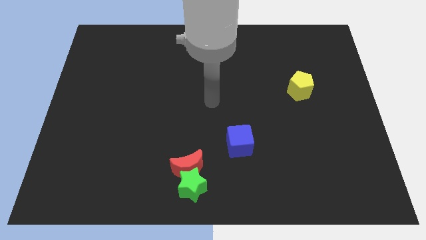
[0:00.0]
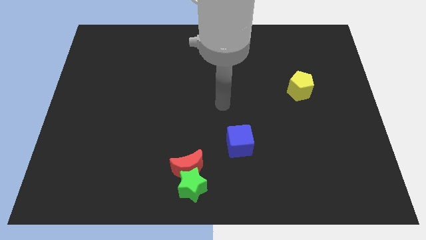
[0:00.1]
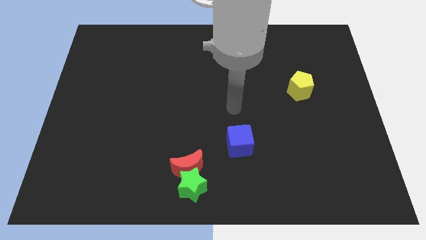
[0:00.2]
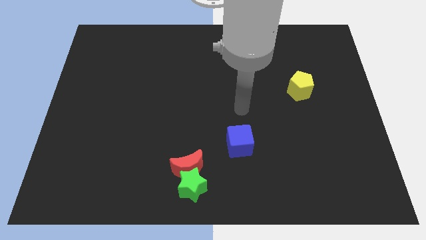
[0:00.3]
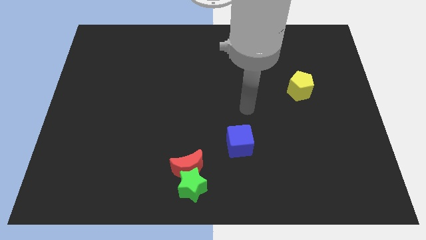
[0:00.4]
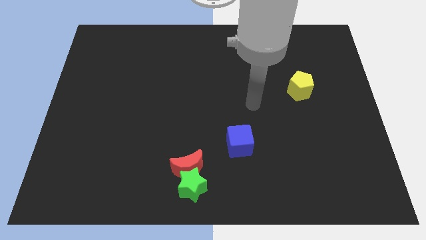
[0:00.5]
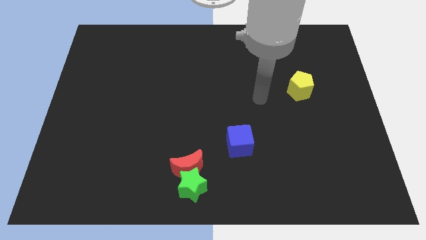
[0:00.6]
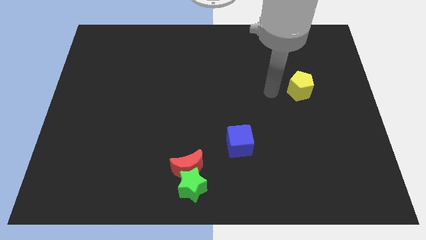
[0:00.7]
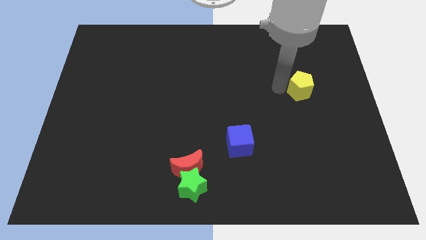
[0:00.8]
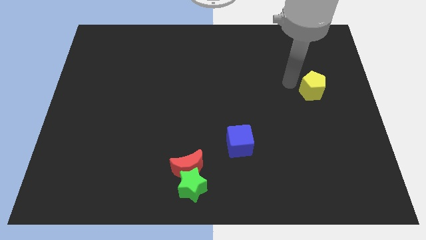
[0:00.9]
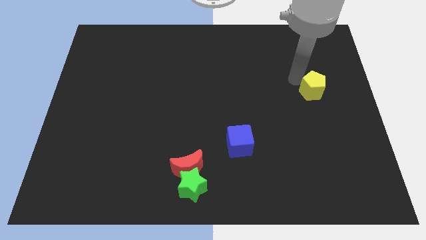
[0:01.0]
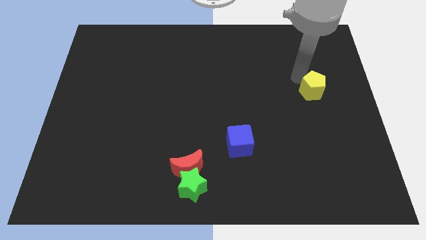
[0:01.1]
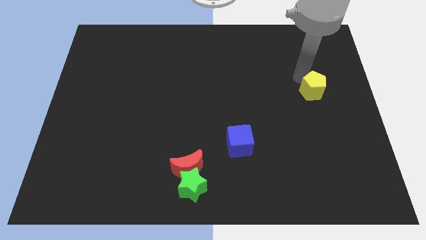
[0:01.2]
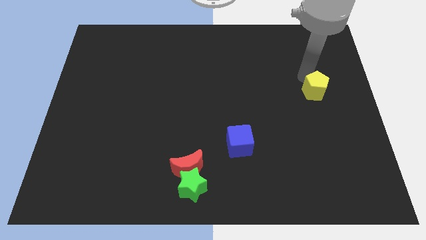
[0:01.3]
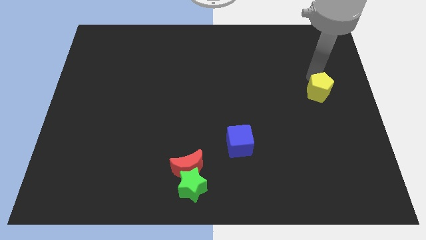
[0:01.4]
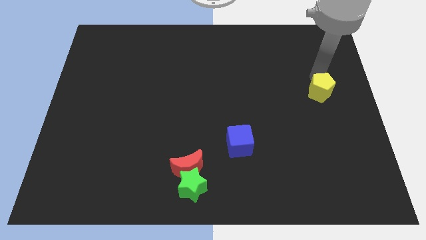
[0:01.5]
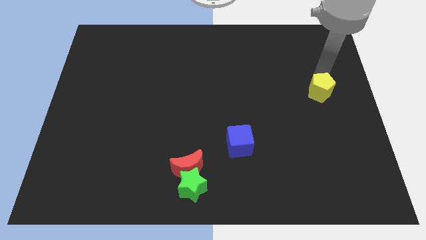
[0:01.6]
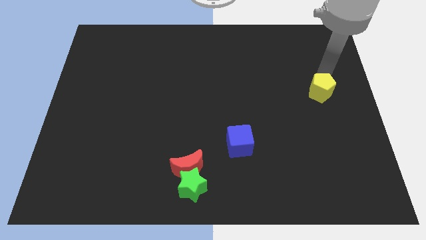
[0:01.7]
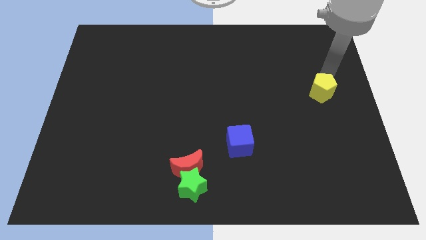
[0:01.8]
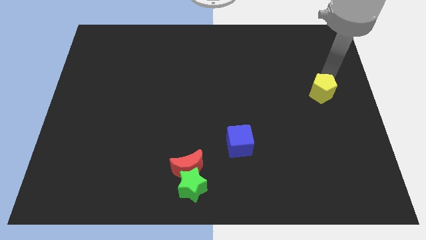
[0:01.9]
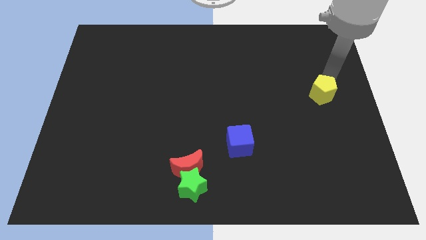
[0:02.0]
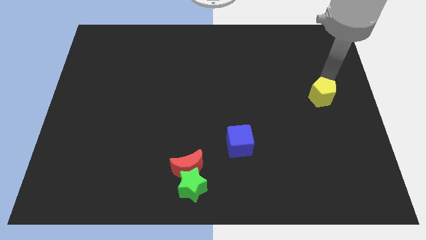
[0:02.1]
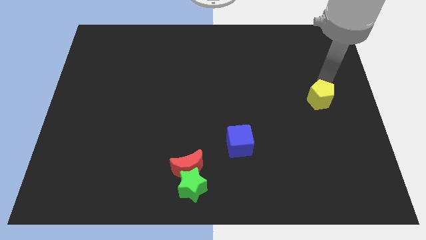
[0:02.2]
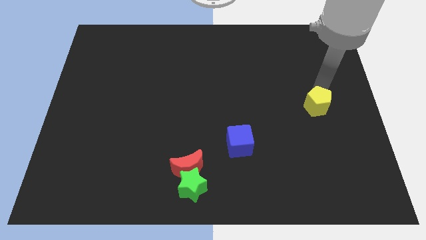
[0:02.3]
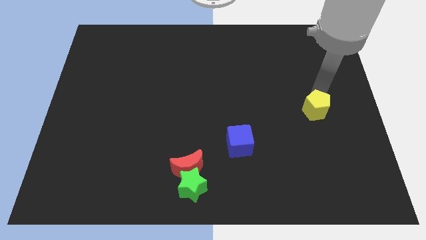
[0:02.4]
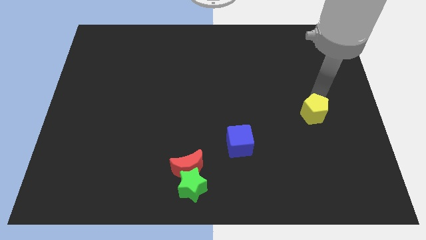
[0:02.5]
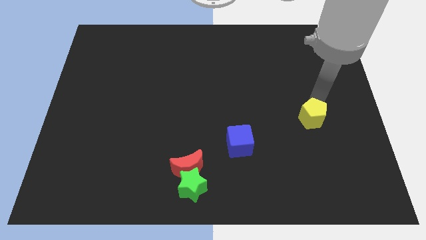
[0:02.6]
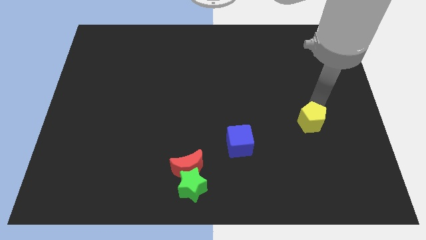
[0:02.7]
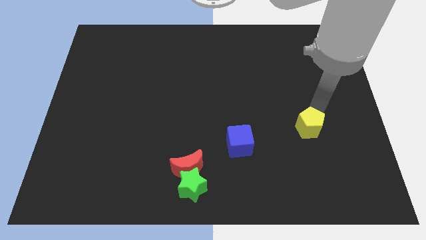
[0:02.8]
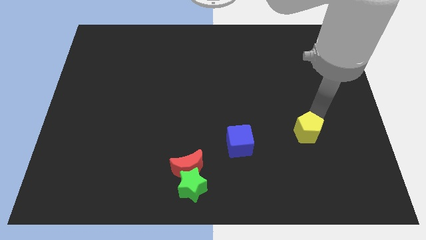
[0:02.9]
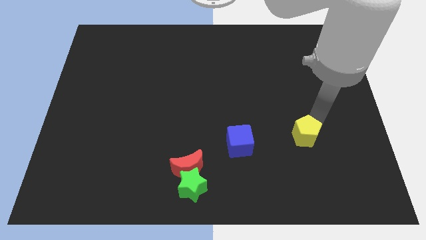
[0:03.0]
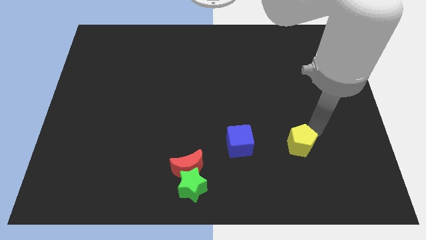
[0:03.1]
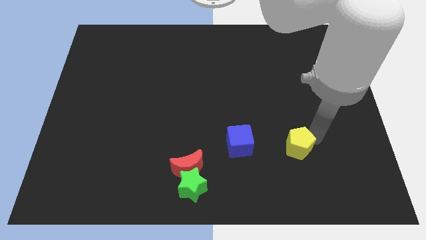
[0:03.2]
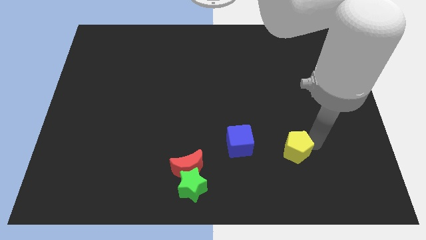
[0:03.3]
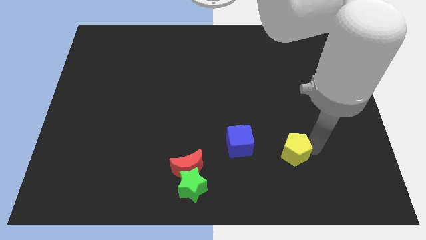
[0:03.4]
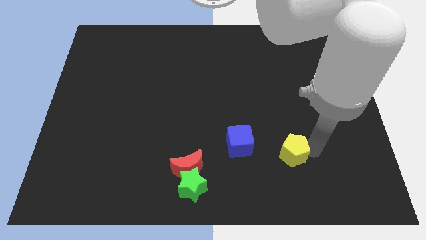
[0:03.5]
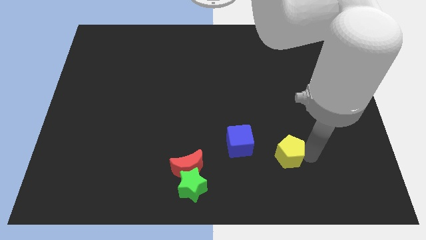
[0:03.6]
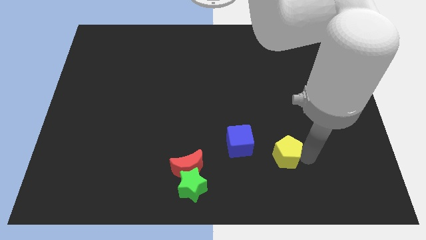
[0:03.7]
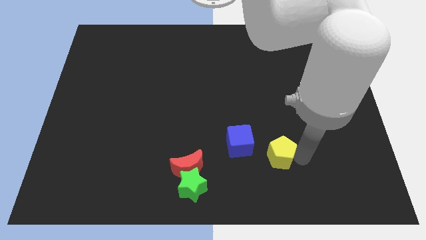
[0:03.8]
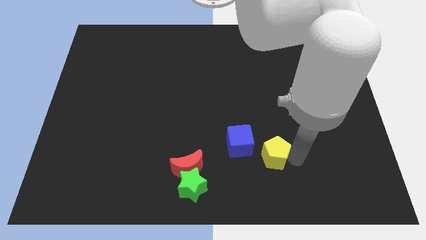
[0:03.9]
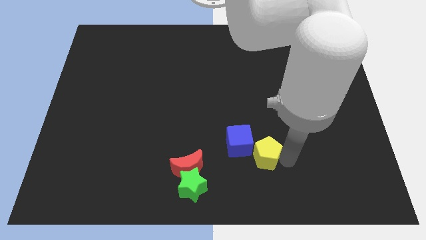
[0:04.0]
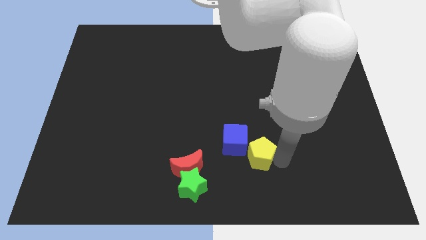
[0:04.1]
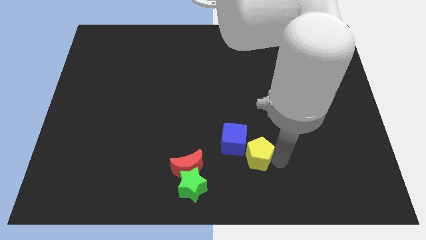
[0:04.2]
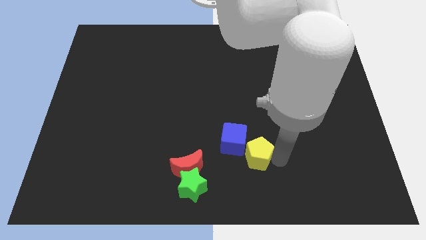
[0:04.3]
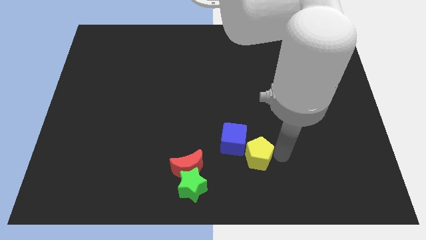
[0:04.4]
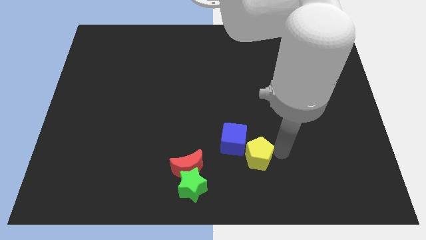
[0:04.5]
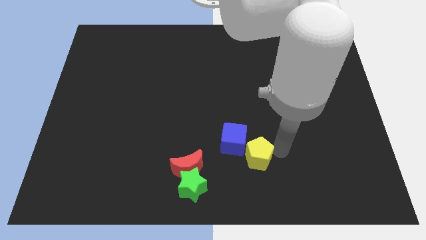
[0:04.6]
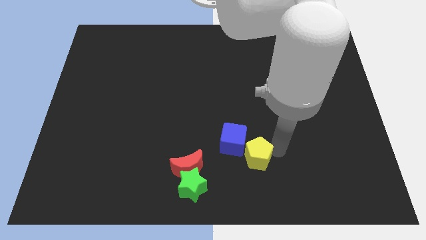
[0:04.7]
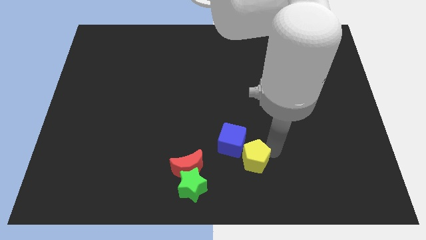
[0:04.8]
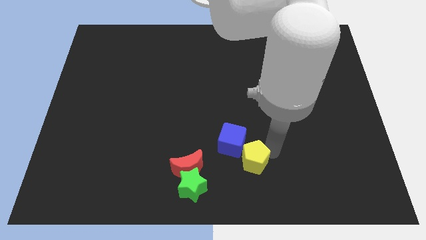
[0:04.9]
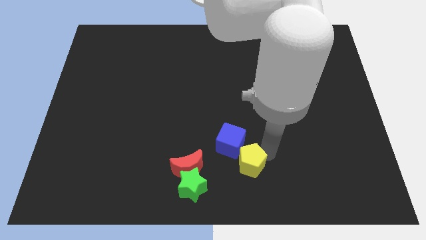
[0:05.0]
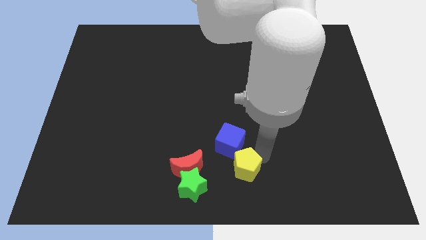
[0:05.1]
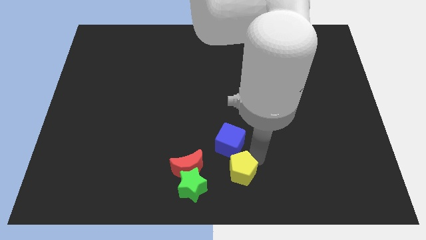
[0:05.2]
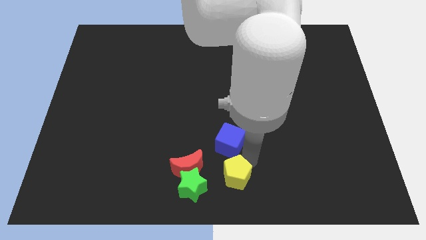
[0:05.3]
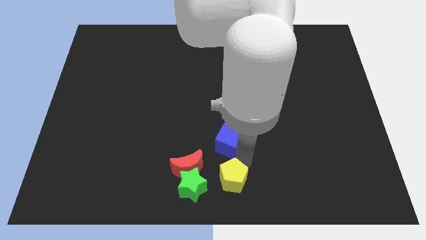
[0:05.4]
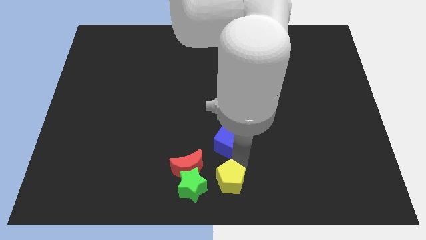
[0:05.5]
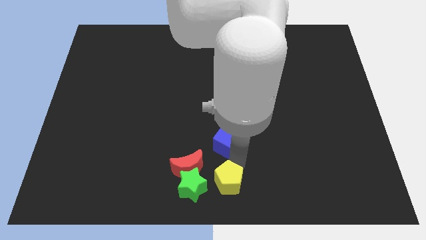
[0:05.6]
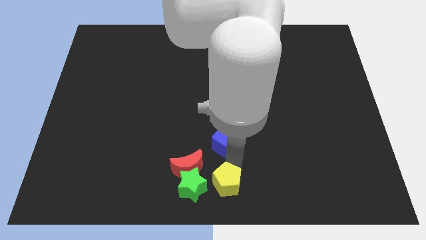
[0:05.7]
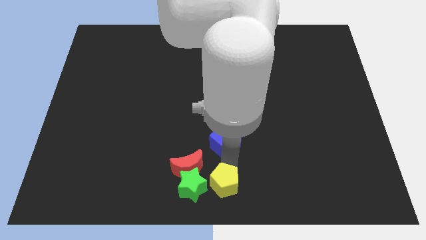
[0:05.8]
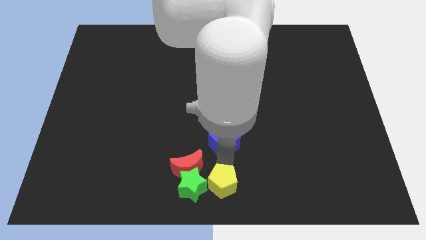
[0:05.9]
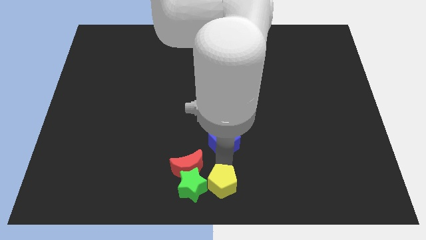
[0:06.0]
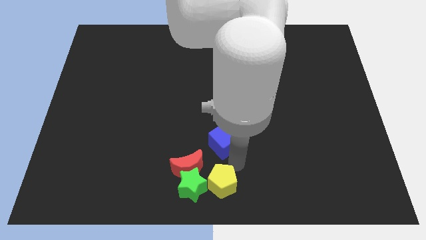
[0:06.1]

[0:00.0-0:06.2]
put the pentagon next to the green block

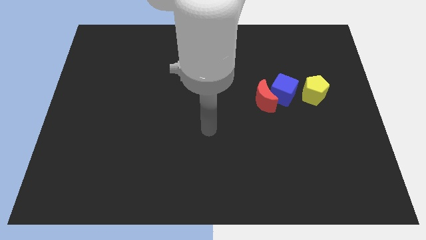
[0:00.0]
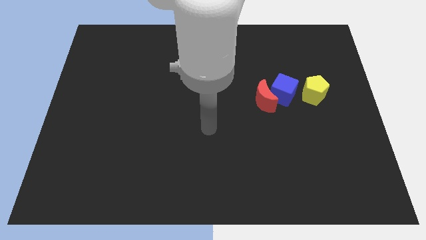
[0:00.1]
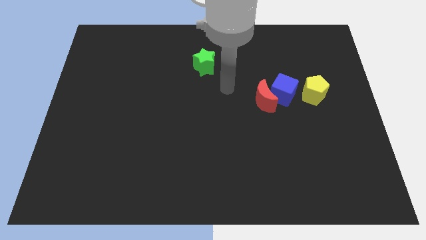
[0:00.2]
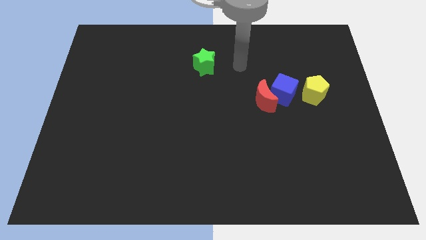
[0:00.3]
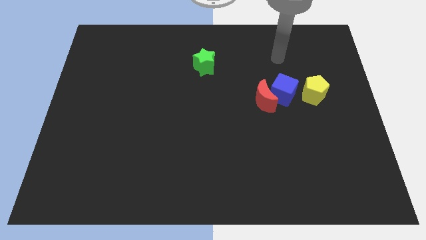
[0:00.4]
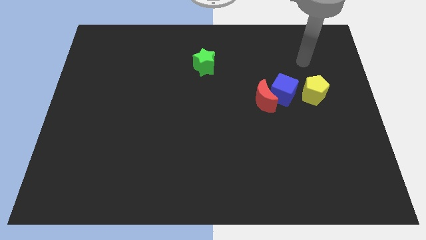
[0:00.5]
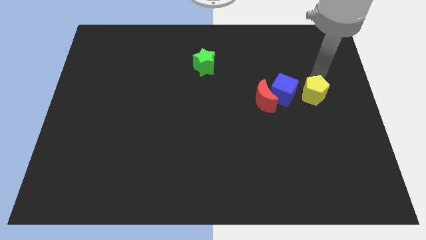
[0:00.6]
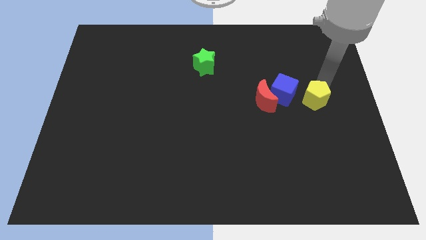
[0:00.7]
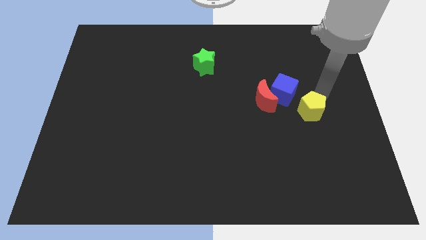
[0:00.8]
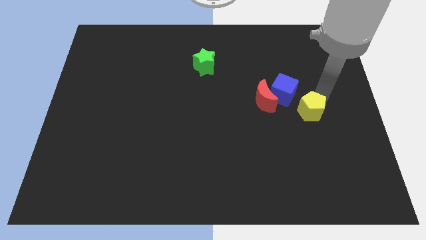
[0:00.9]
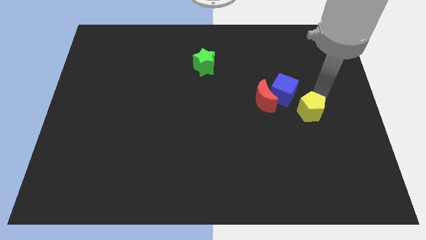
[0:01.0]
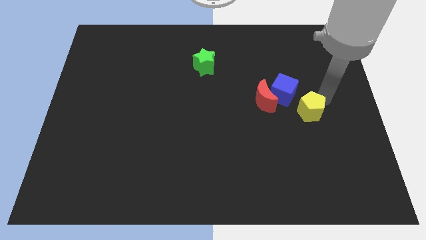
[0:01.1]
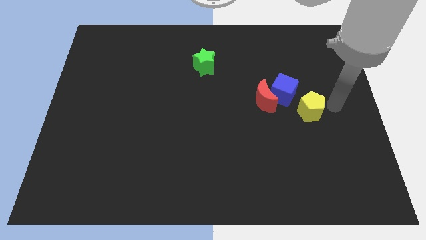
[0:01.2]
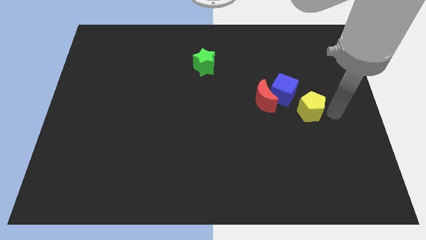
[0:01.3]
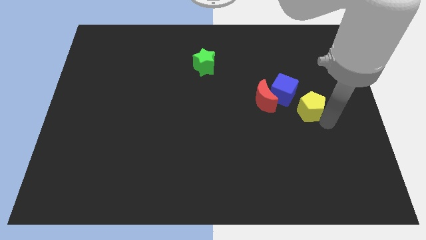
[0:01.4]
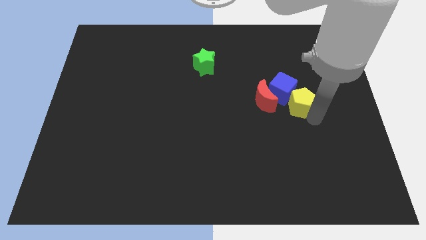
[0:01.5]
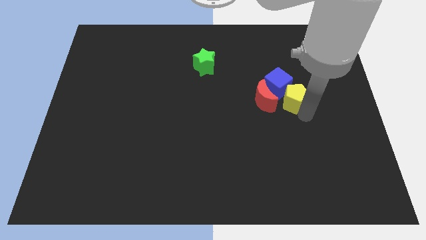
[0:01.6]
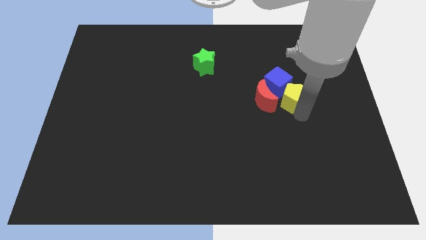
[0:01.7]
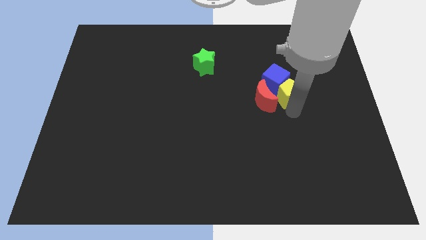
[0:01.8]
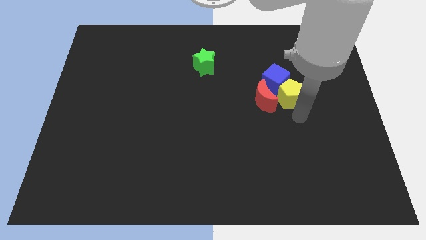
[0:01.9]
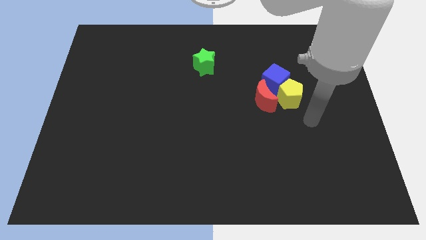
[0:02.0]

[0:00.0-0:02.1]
push the pentagon next to the moon

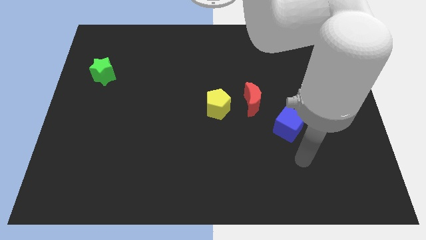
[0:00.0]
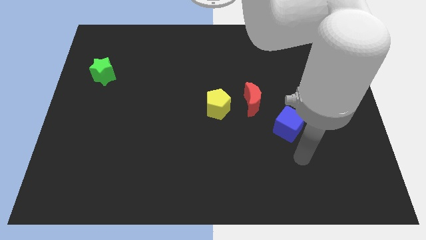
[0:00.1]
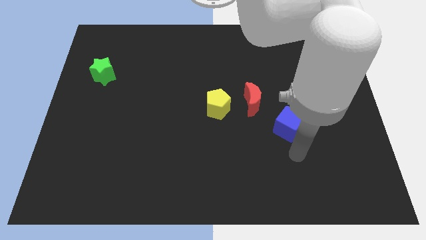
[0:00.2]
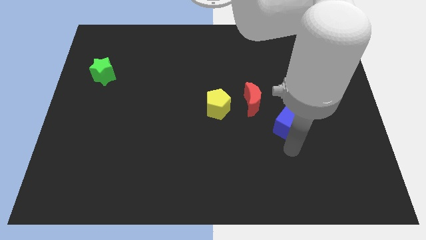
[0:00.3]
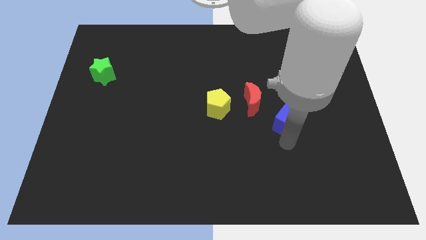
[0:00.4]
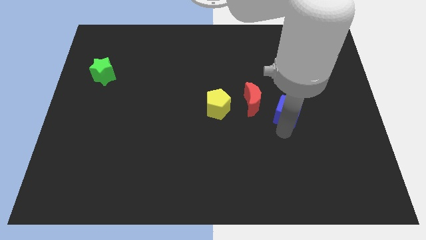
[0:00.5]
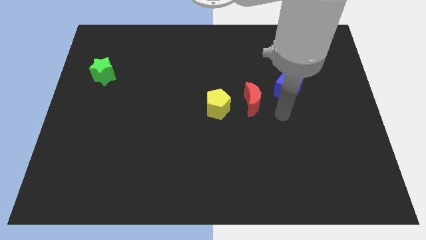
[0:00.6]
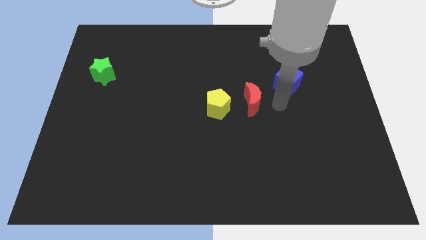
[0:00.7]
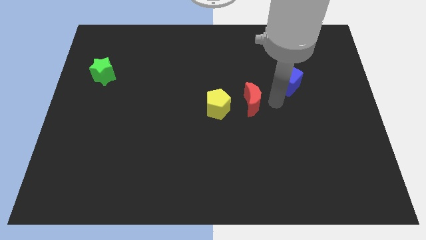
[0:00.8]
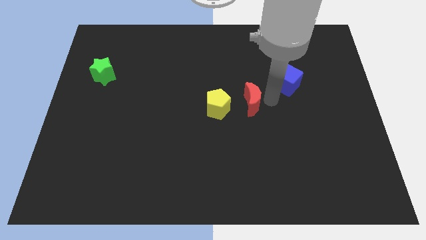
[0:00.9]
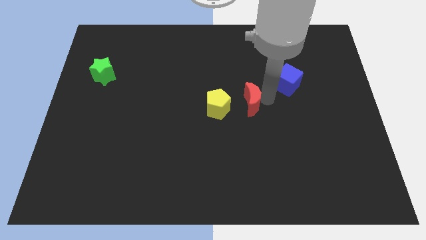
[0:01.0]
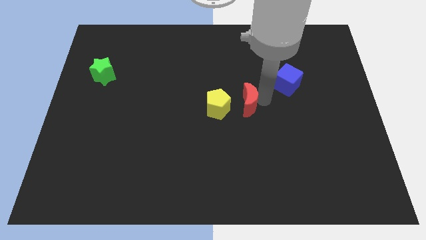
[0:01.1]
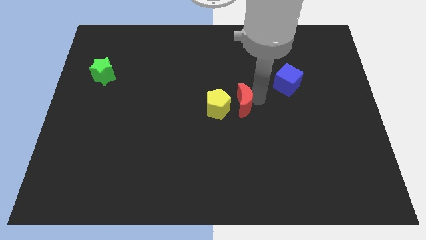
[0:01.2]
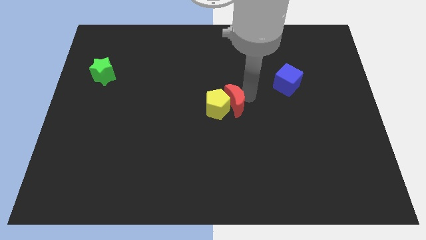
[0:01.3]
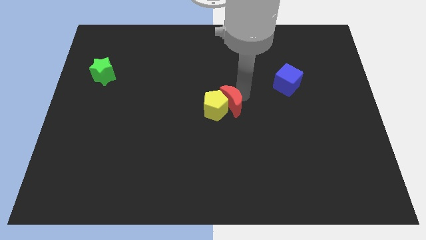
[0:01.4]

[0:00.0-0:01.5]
push the red block to the yellow pentagon
